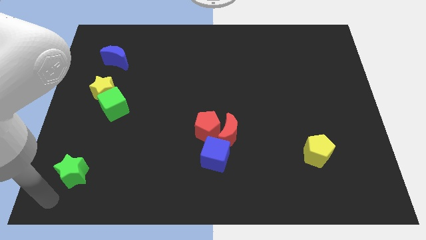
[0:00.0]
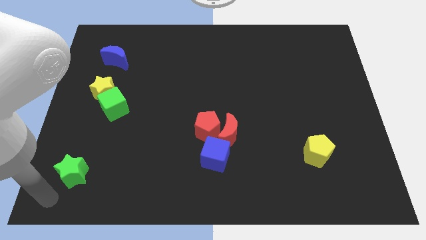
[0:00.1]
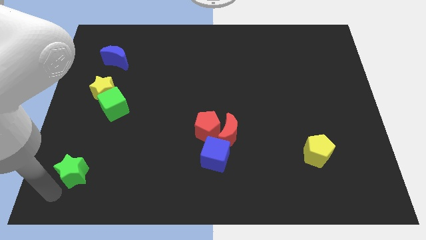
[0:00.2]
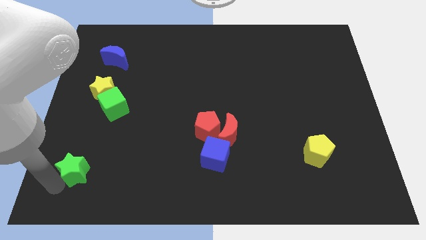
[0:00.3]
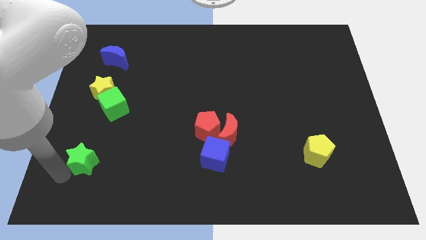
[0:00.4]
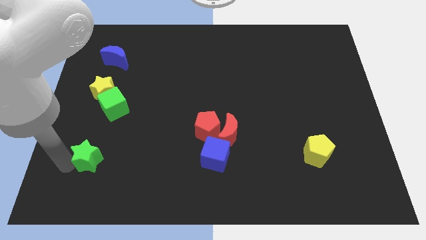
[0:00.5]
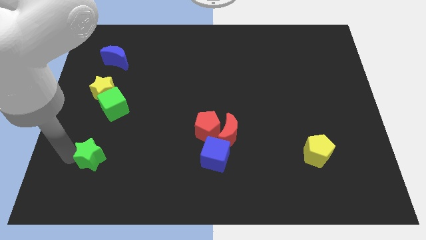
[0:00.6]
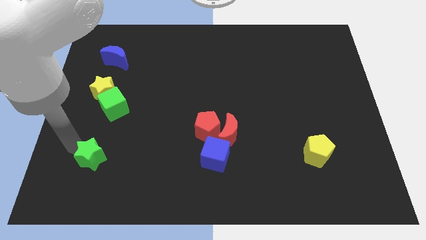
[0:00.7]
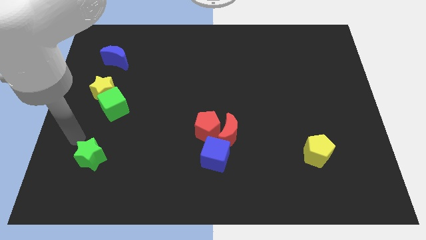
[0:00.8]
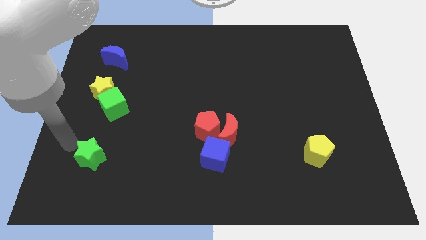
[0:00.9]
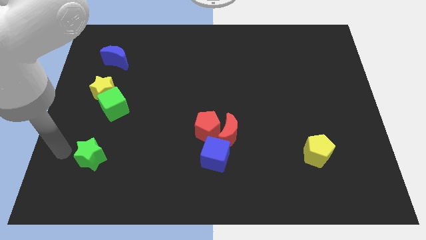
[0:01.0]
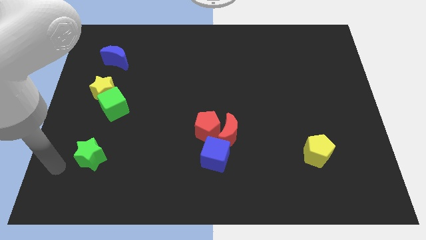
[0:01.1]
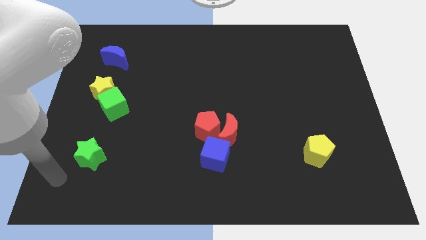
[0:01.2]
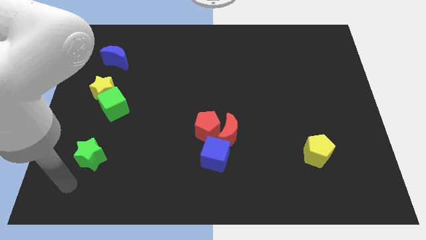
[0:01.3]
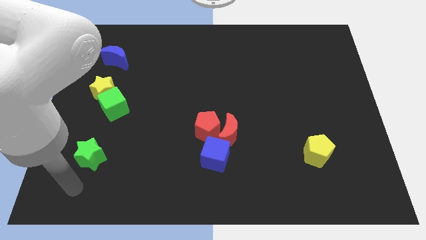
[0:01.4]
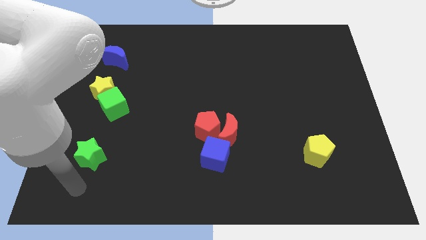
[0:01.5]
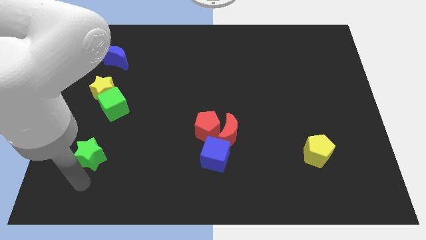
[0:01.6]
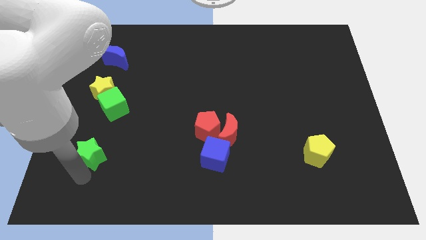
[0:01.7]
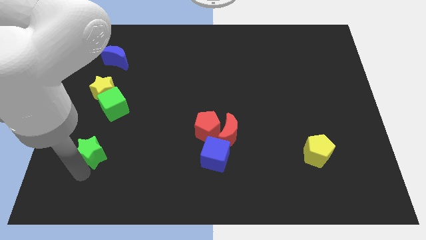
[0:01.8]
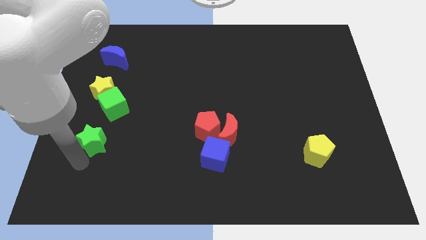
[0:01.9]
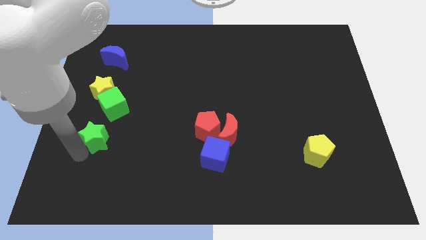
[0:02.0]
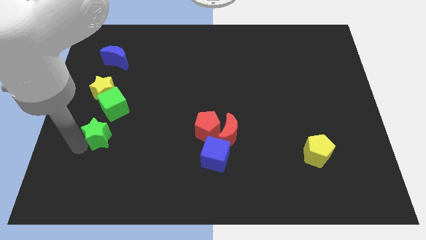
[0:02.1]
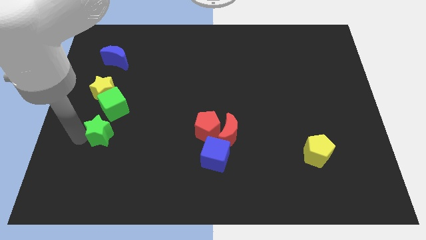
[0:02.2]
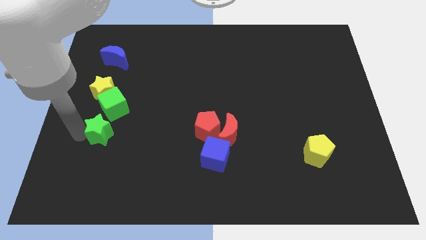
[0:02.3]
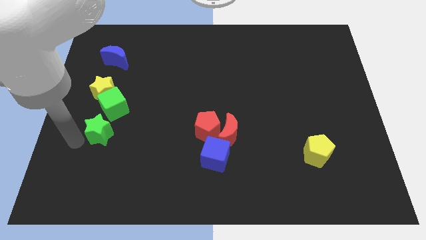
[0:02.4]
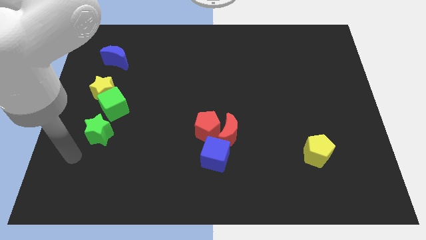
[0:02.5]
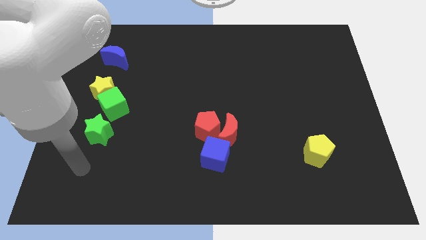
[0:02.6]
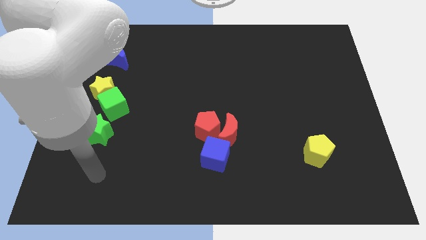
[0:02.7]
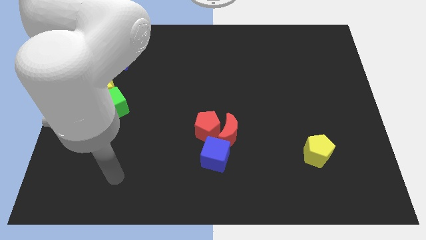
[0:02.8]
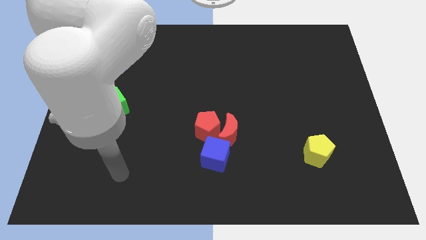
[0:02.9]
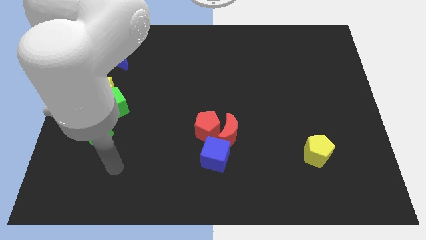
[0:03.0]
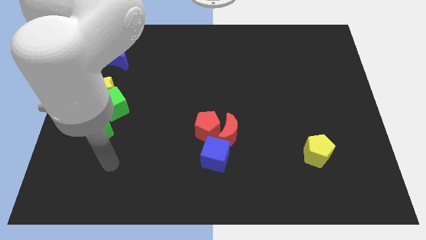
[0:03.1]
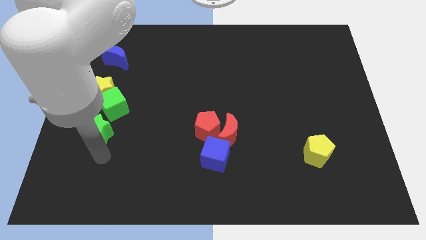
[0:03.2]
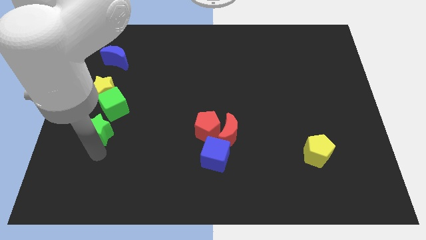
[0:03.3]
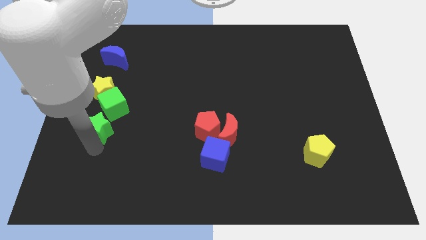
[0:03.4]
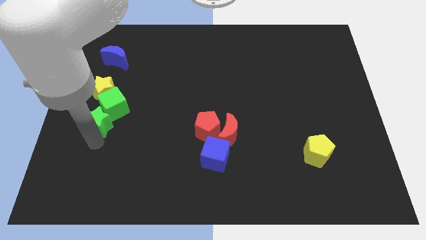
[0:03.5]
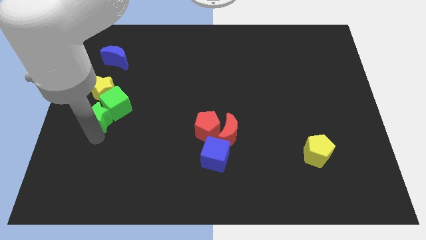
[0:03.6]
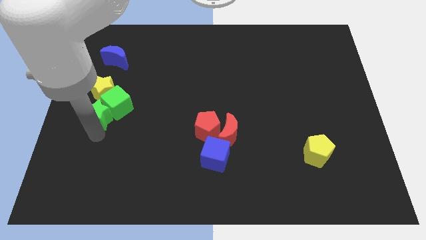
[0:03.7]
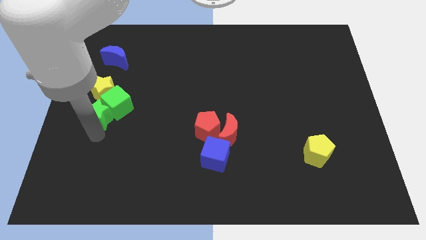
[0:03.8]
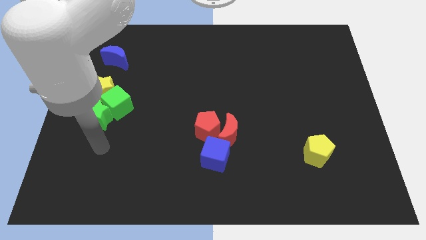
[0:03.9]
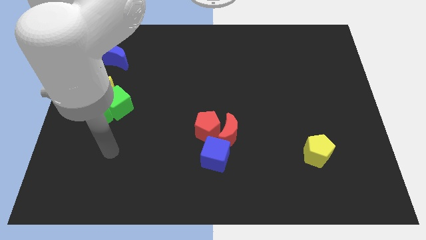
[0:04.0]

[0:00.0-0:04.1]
move the green star into the green cube

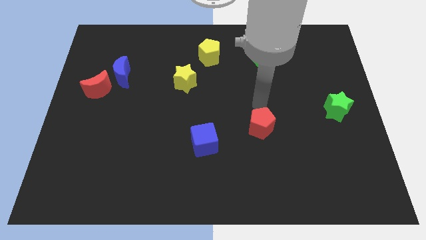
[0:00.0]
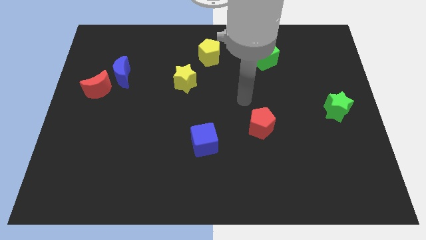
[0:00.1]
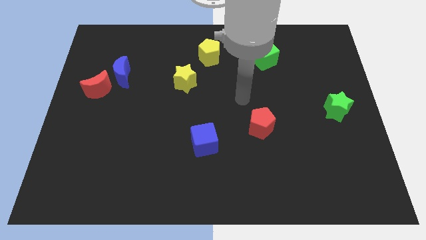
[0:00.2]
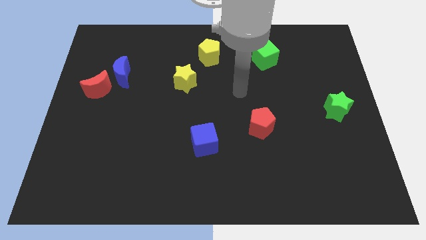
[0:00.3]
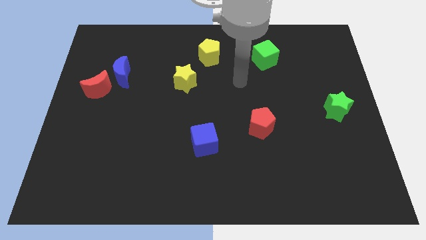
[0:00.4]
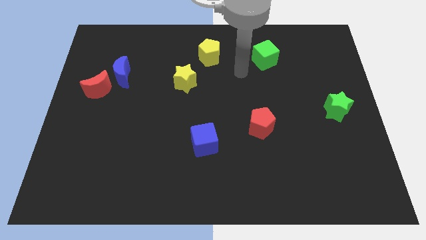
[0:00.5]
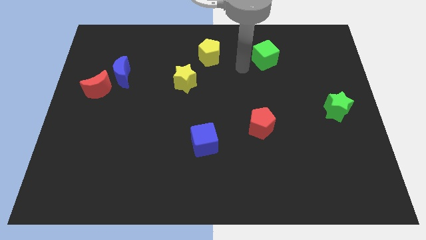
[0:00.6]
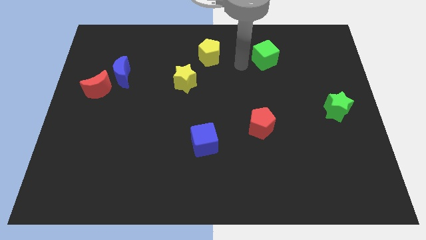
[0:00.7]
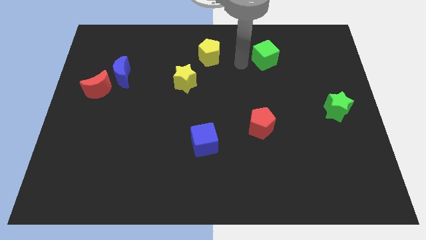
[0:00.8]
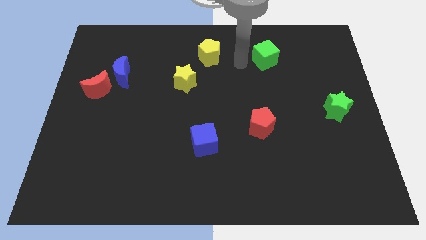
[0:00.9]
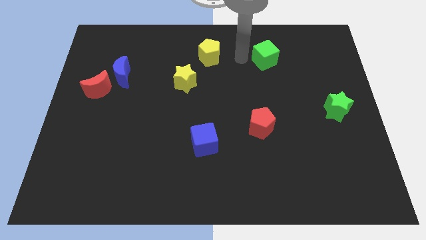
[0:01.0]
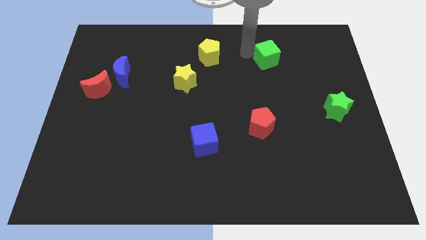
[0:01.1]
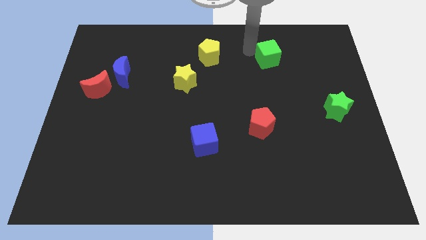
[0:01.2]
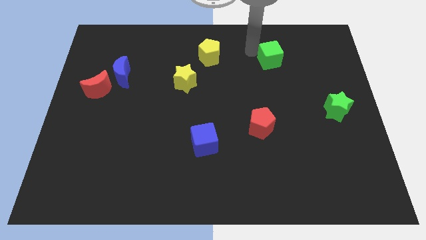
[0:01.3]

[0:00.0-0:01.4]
point your arm at the top left of the green cube

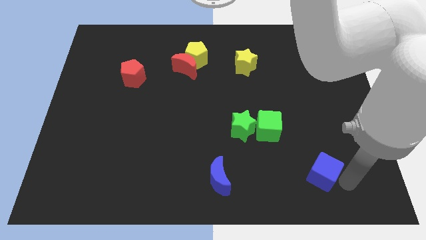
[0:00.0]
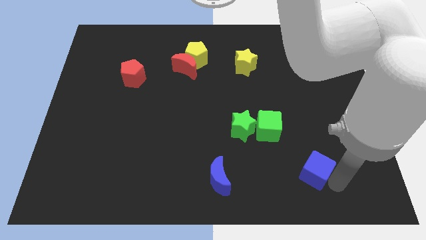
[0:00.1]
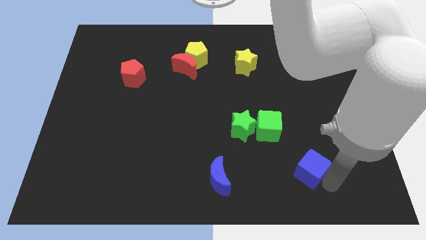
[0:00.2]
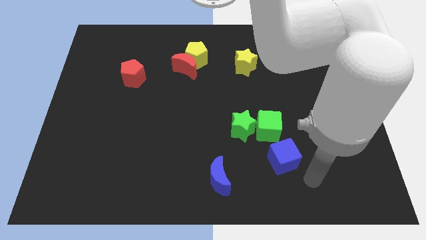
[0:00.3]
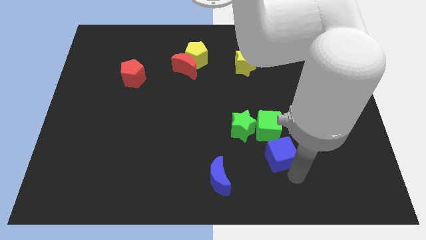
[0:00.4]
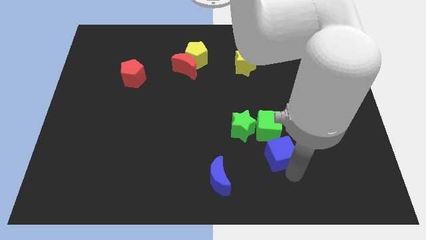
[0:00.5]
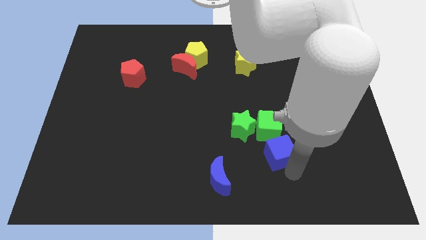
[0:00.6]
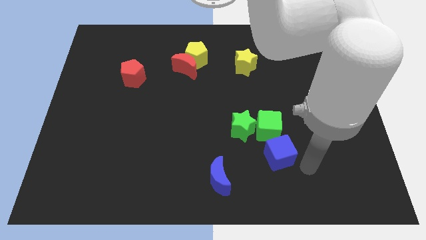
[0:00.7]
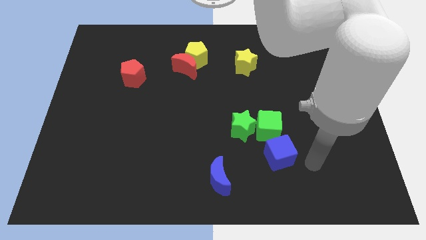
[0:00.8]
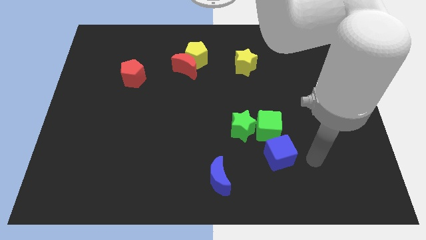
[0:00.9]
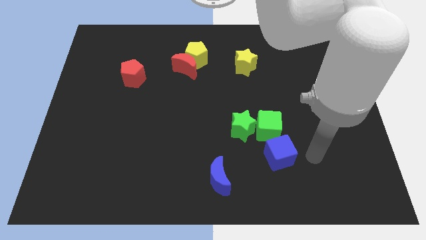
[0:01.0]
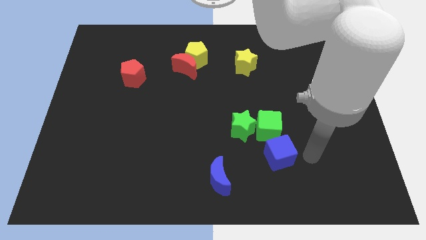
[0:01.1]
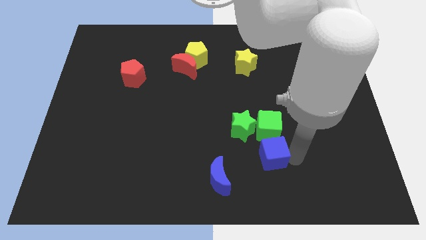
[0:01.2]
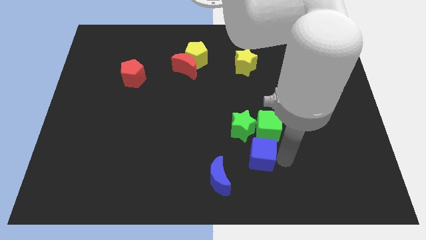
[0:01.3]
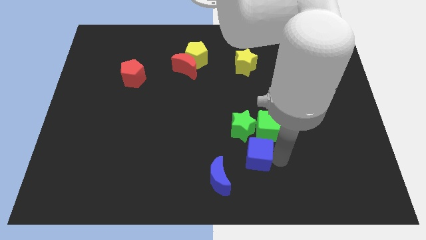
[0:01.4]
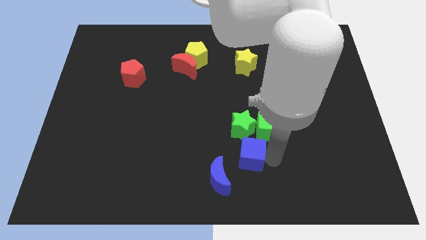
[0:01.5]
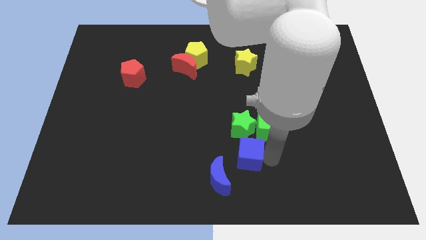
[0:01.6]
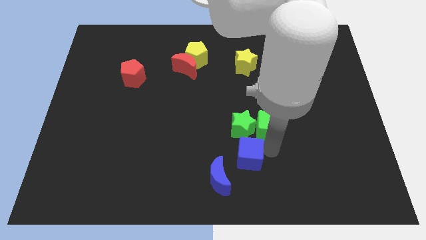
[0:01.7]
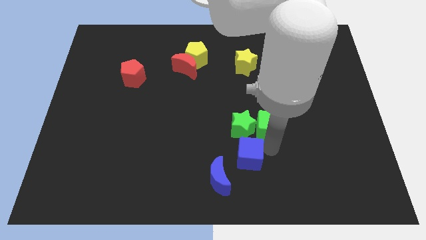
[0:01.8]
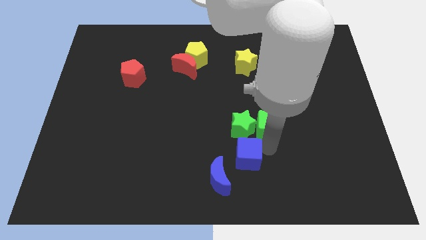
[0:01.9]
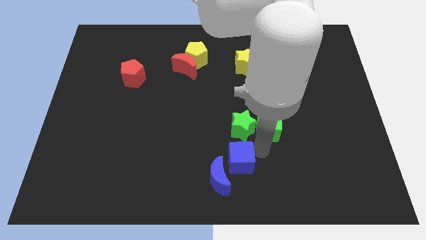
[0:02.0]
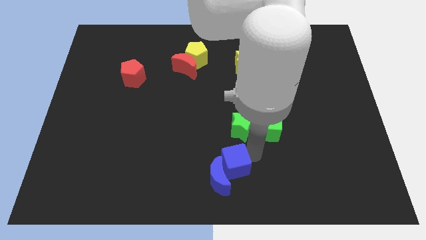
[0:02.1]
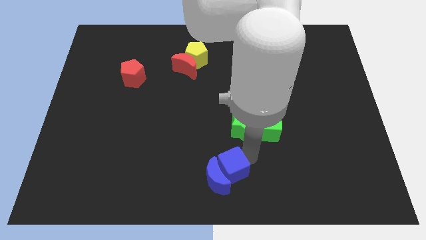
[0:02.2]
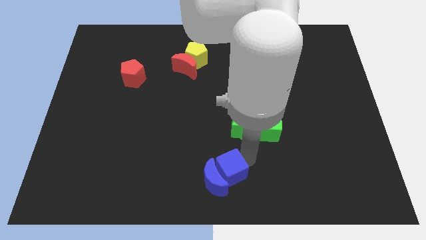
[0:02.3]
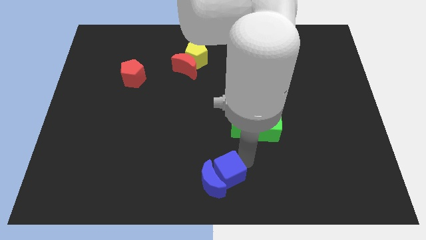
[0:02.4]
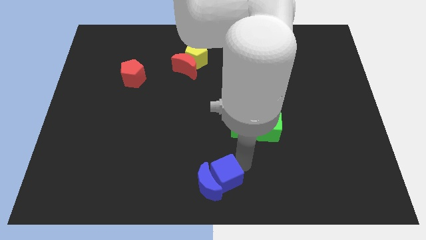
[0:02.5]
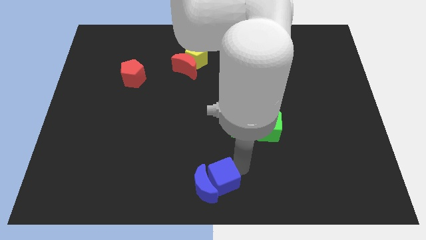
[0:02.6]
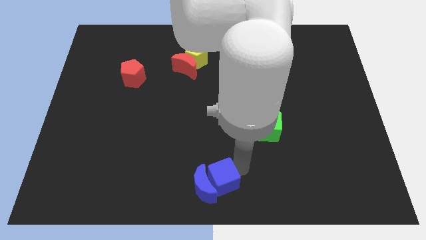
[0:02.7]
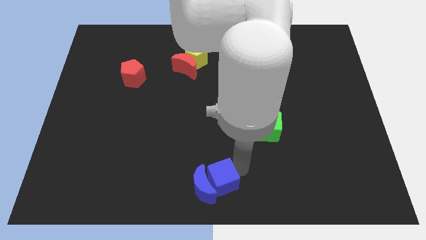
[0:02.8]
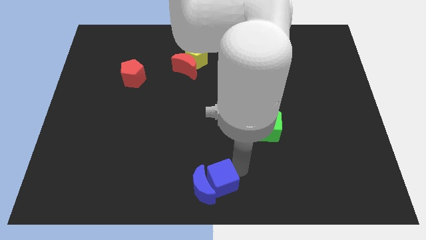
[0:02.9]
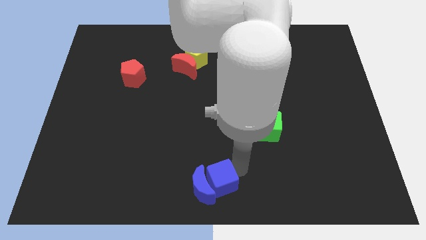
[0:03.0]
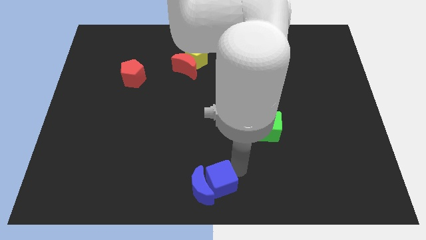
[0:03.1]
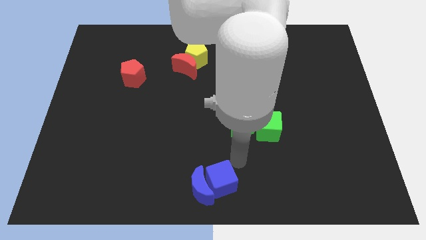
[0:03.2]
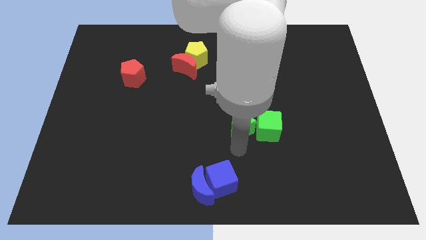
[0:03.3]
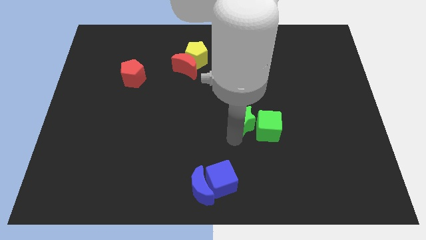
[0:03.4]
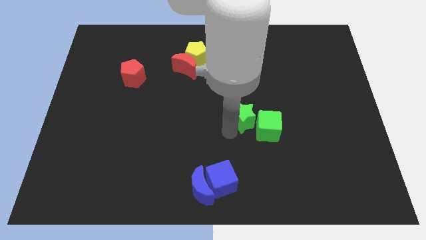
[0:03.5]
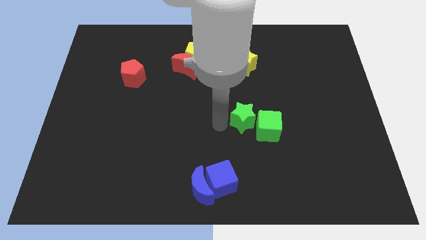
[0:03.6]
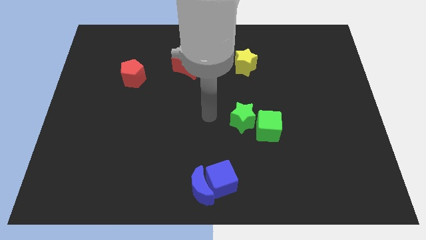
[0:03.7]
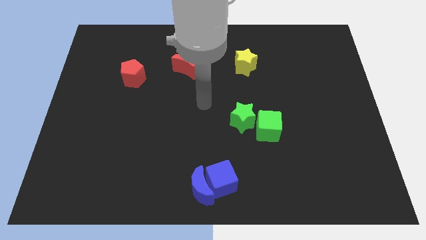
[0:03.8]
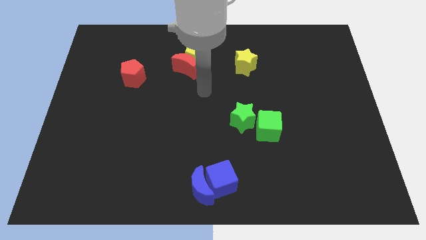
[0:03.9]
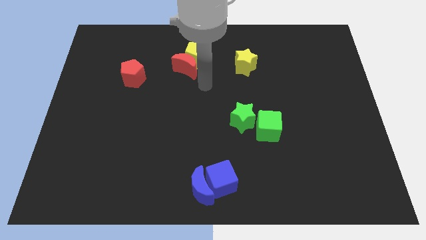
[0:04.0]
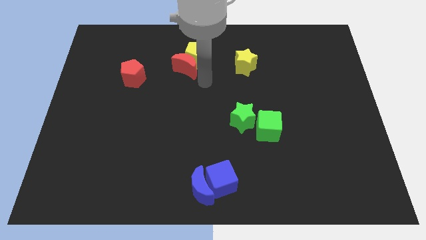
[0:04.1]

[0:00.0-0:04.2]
push the blue cube into the blue moon
